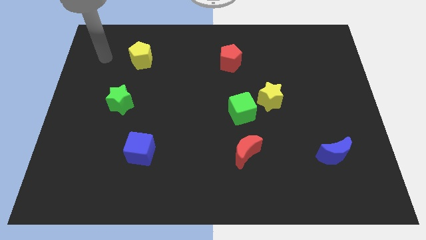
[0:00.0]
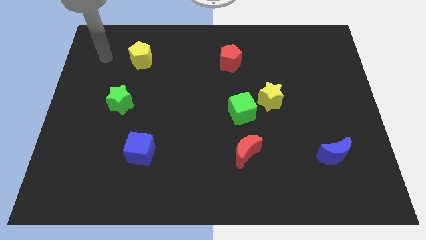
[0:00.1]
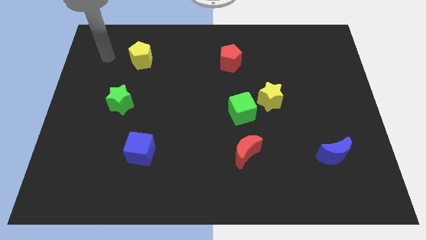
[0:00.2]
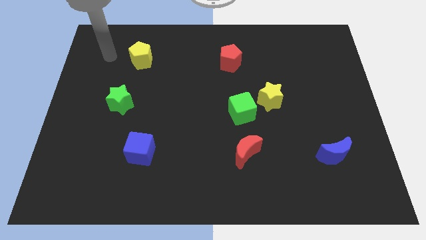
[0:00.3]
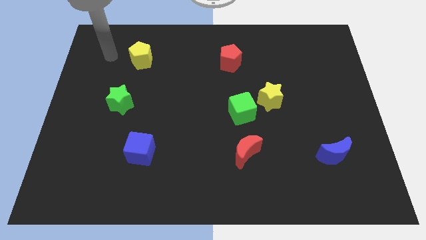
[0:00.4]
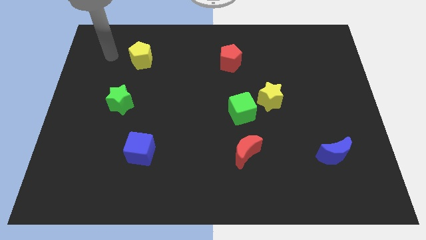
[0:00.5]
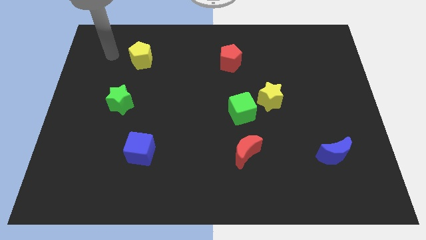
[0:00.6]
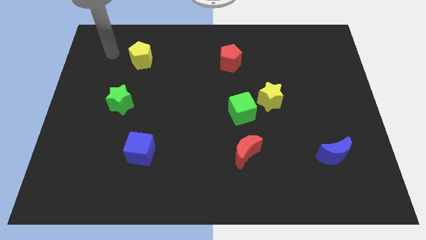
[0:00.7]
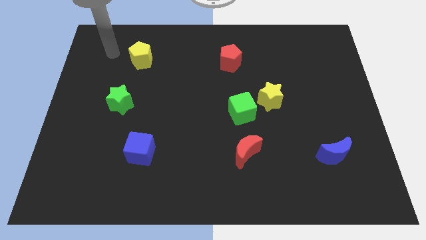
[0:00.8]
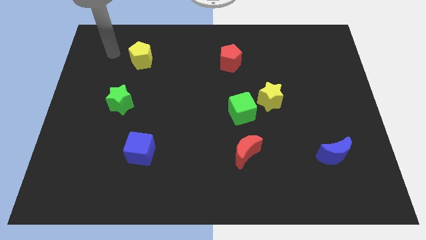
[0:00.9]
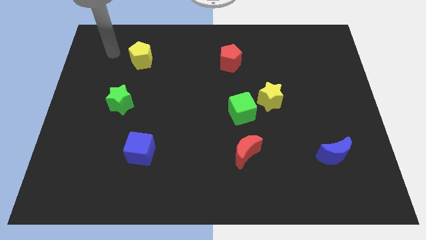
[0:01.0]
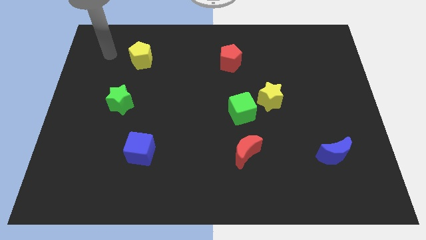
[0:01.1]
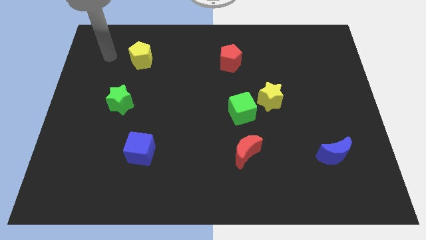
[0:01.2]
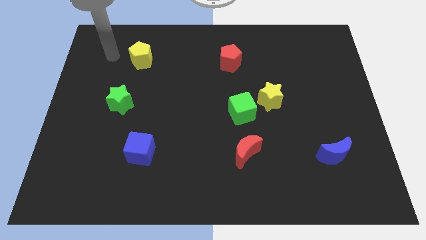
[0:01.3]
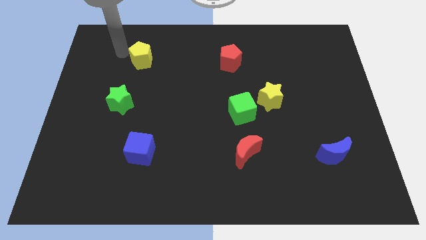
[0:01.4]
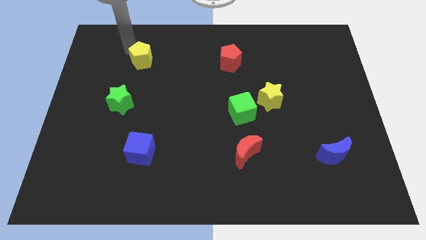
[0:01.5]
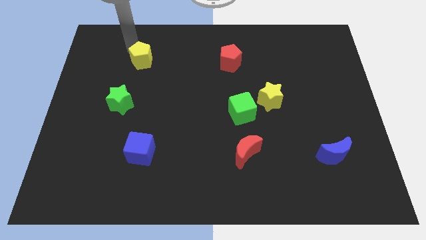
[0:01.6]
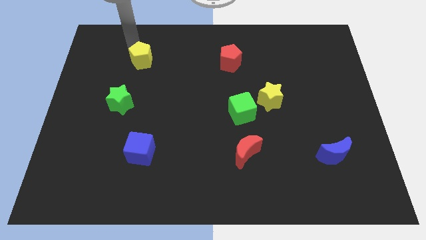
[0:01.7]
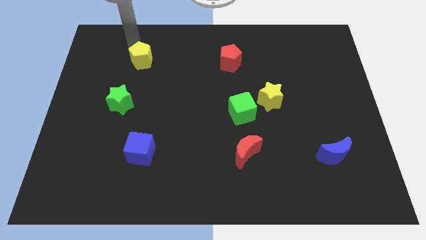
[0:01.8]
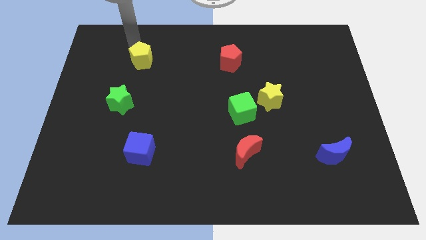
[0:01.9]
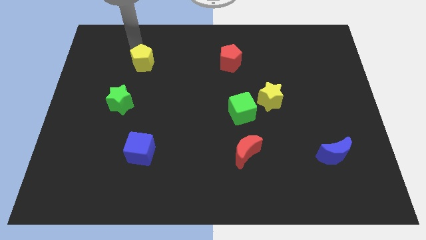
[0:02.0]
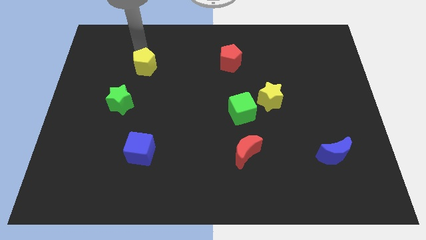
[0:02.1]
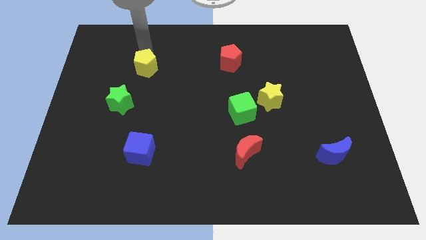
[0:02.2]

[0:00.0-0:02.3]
push the yellow pentagon slightly to the bottom

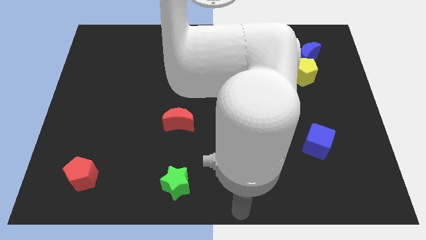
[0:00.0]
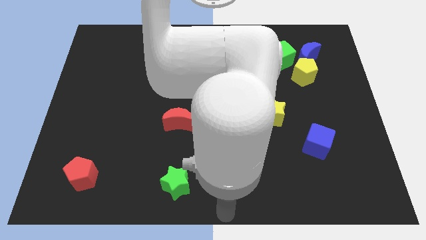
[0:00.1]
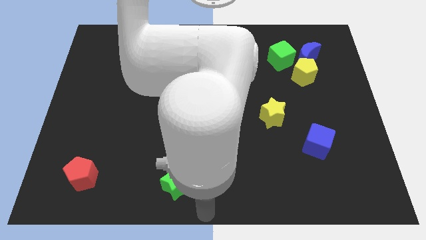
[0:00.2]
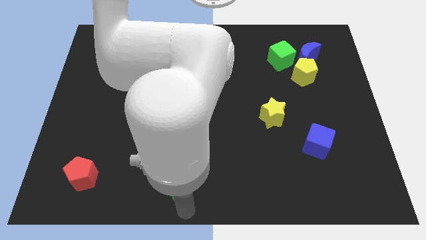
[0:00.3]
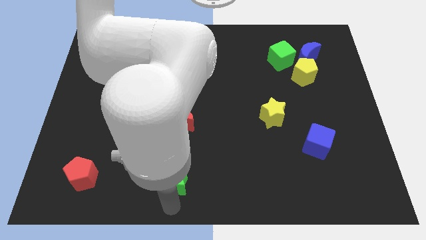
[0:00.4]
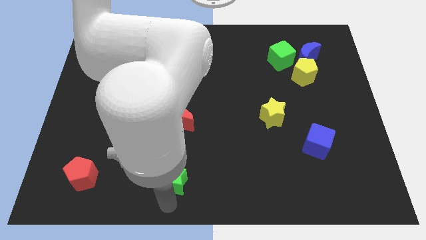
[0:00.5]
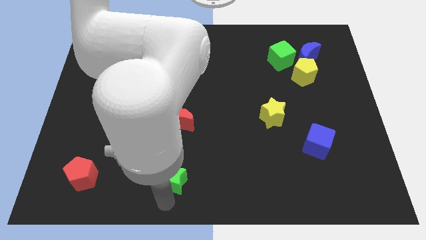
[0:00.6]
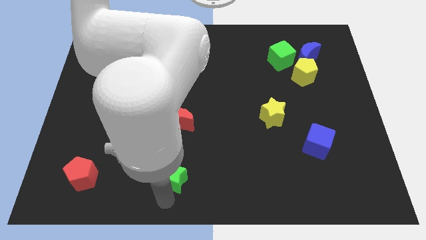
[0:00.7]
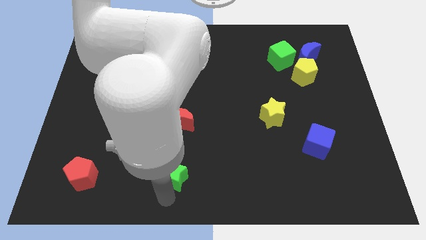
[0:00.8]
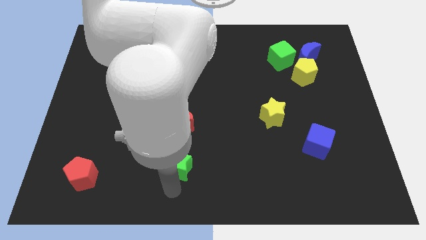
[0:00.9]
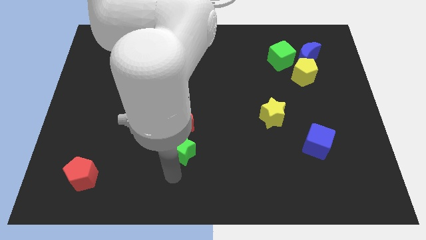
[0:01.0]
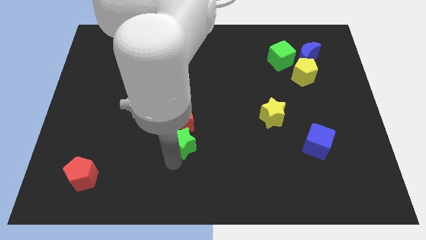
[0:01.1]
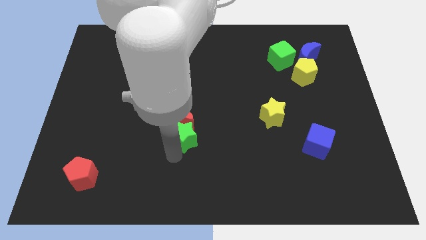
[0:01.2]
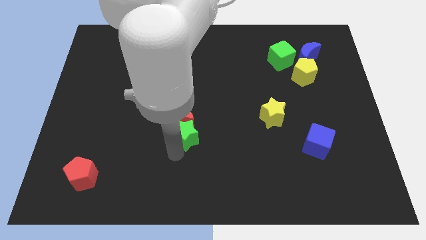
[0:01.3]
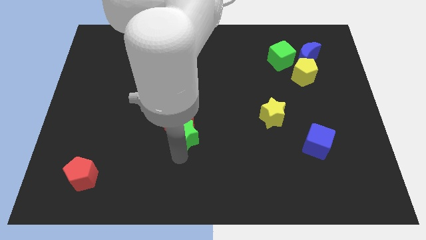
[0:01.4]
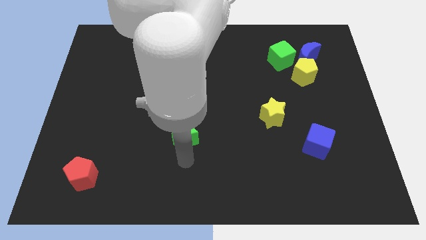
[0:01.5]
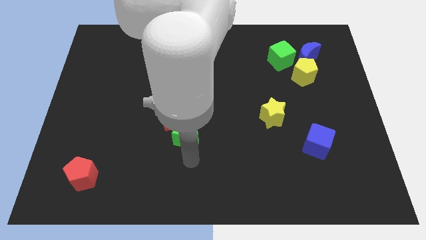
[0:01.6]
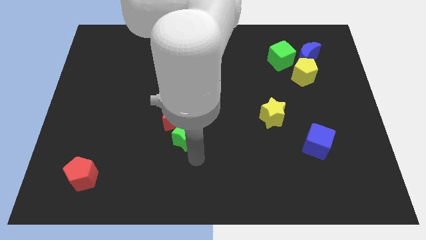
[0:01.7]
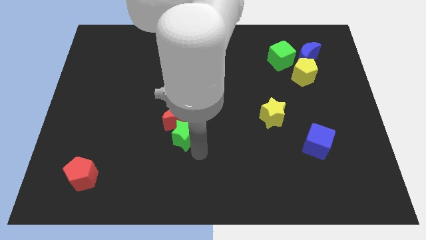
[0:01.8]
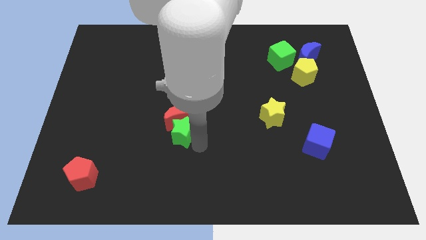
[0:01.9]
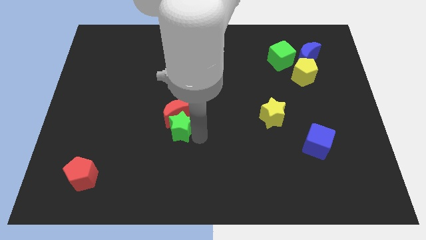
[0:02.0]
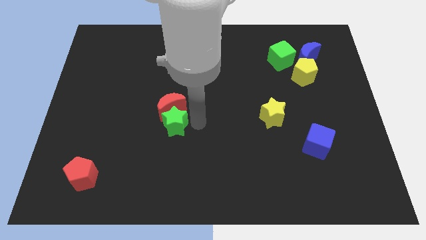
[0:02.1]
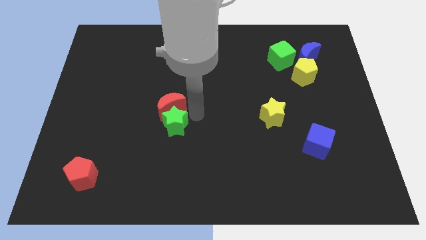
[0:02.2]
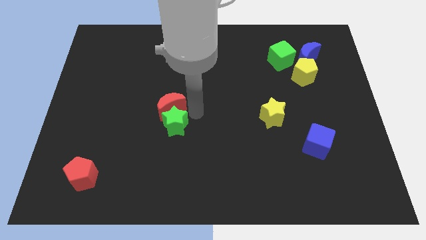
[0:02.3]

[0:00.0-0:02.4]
push the green star into the red crescent

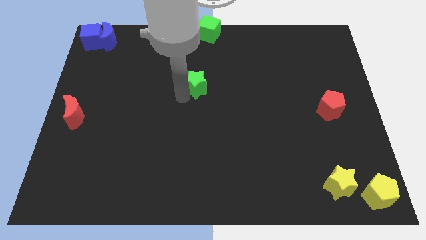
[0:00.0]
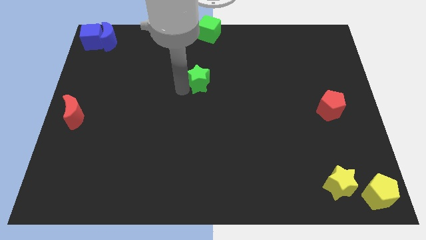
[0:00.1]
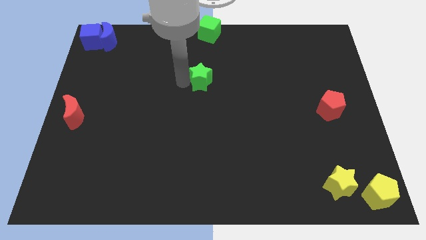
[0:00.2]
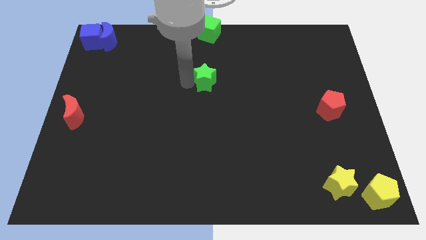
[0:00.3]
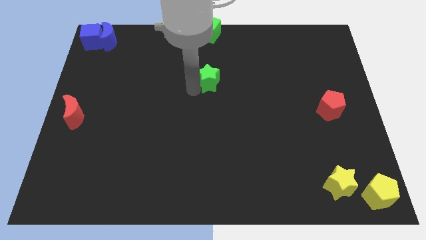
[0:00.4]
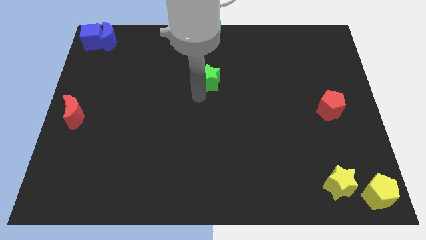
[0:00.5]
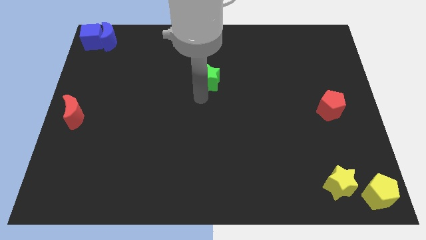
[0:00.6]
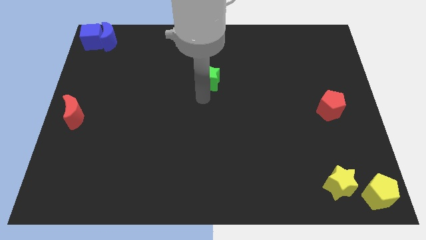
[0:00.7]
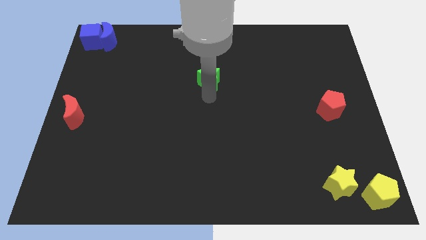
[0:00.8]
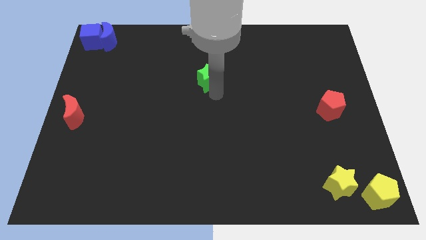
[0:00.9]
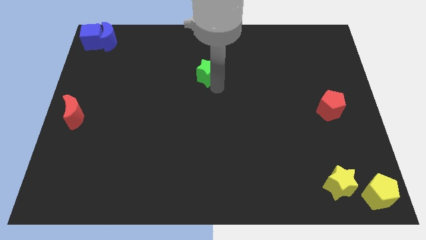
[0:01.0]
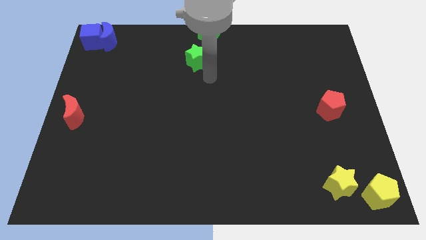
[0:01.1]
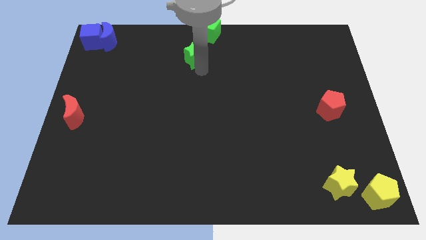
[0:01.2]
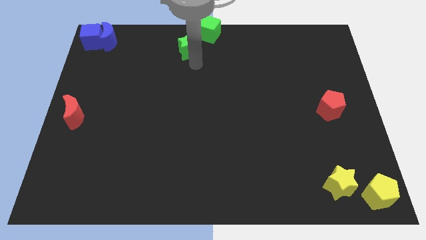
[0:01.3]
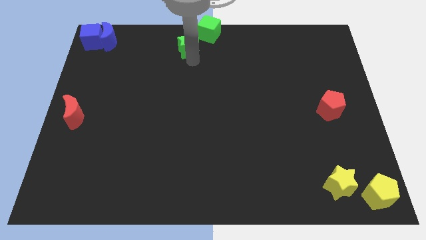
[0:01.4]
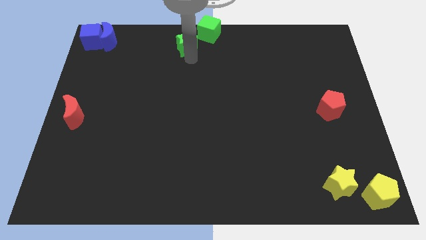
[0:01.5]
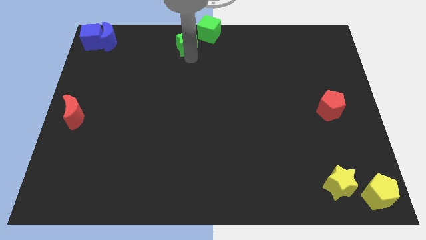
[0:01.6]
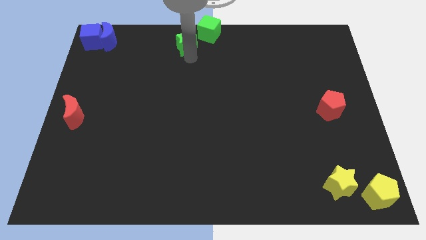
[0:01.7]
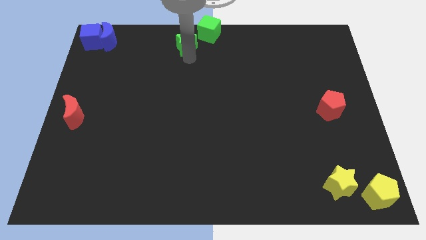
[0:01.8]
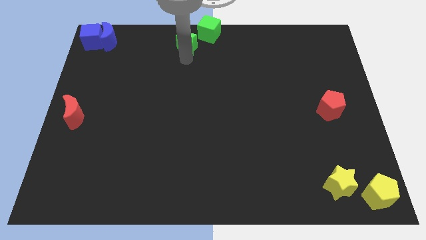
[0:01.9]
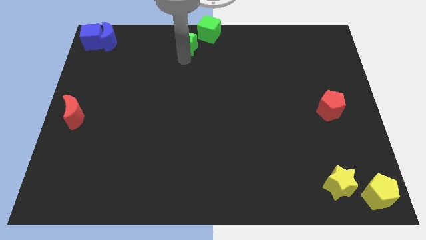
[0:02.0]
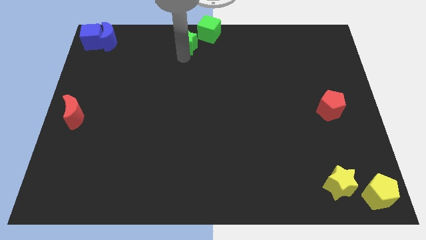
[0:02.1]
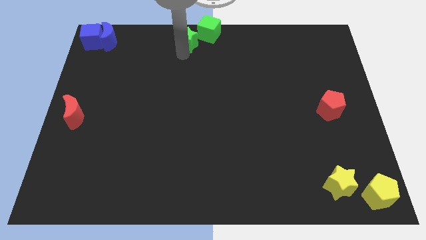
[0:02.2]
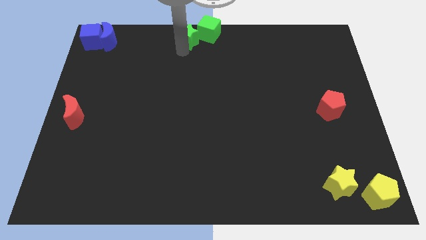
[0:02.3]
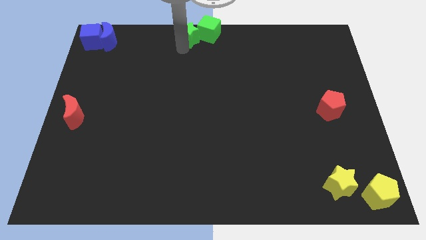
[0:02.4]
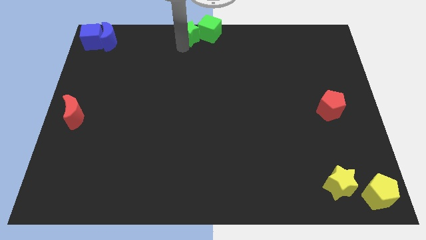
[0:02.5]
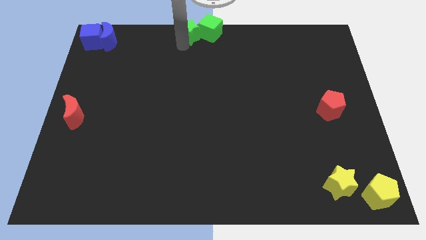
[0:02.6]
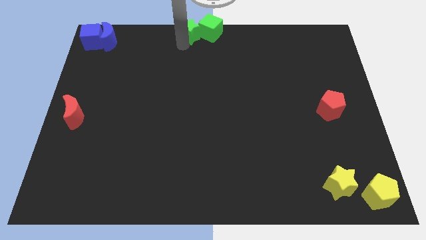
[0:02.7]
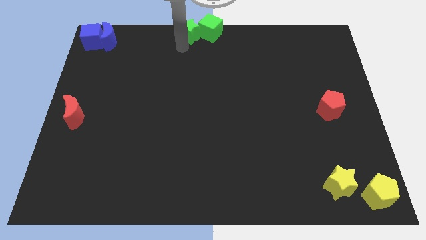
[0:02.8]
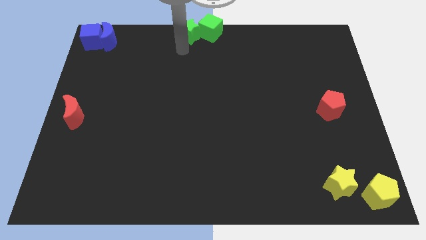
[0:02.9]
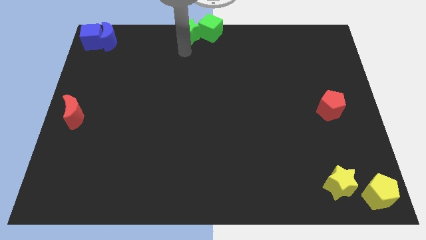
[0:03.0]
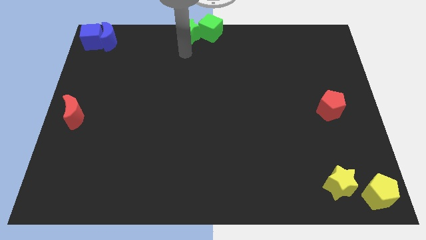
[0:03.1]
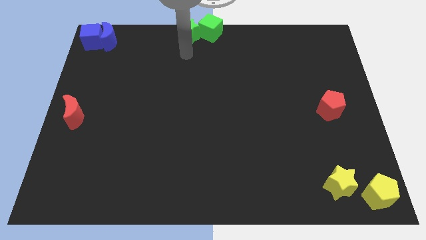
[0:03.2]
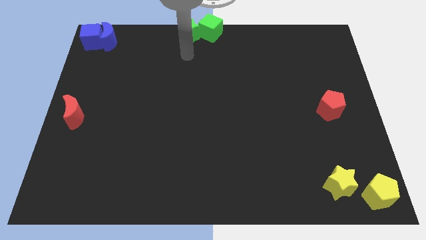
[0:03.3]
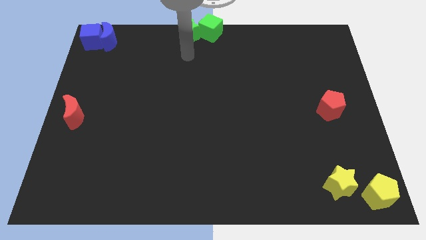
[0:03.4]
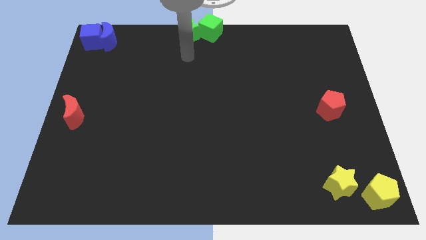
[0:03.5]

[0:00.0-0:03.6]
move the green star left beside the green cube

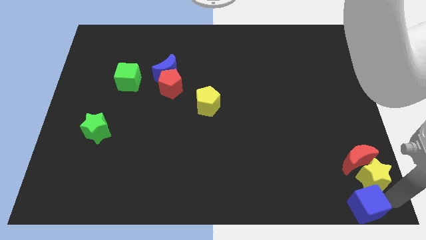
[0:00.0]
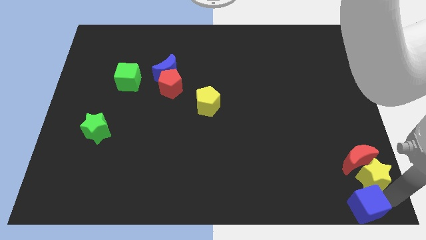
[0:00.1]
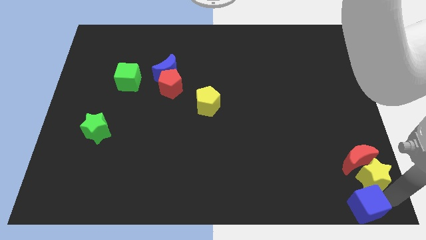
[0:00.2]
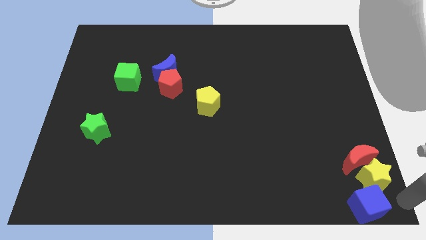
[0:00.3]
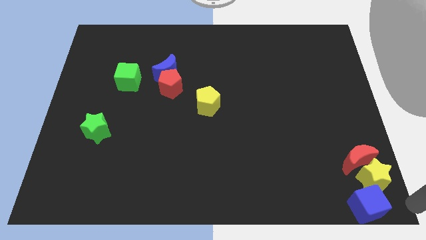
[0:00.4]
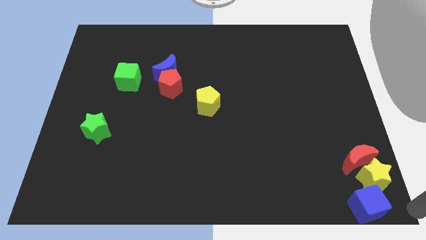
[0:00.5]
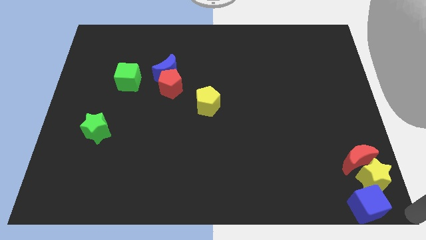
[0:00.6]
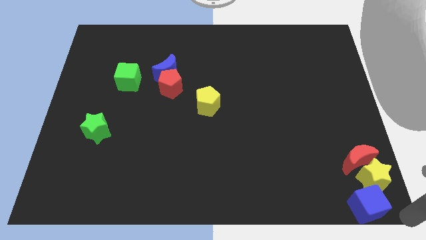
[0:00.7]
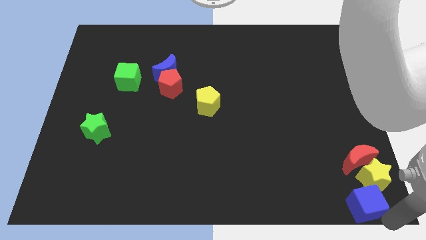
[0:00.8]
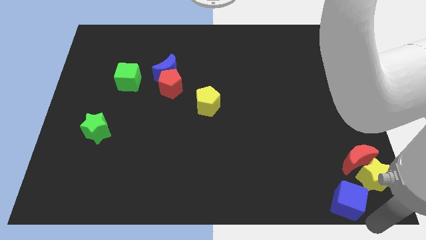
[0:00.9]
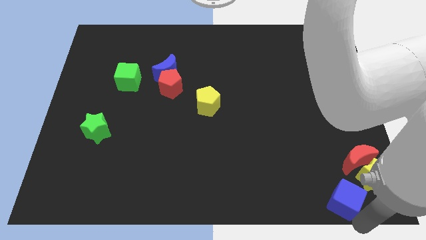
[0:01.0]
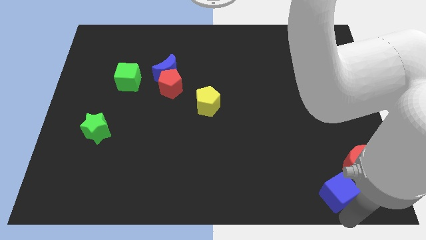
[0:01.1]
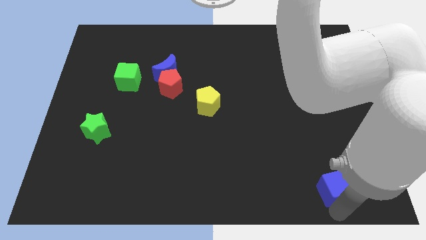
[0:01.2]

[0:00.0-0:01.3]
push the blue cube to the bottom left of yellow star
